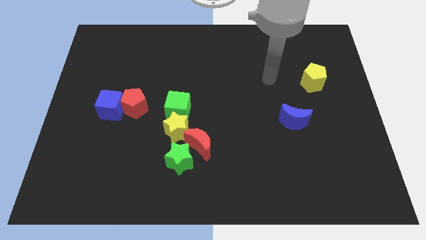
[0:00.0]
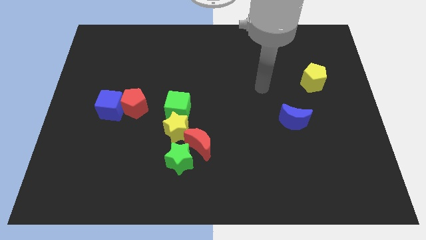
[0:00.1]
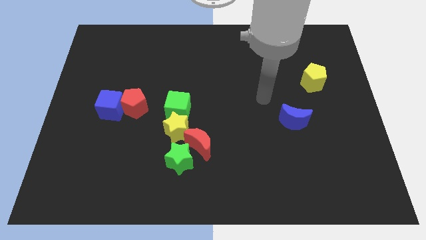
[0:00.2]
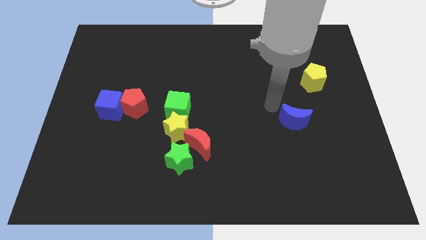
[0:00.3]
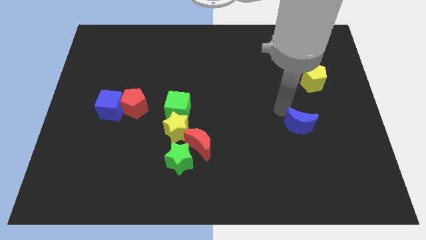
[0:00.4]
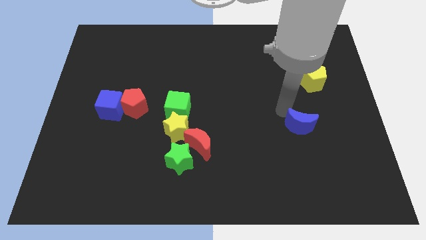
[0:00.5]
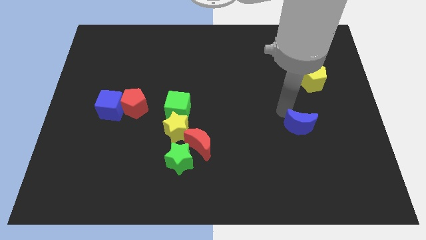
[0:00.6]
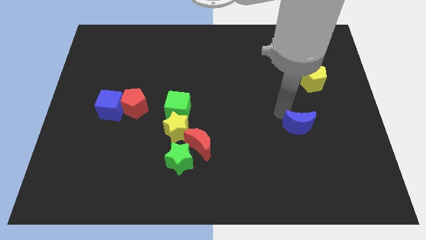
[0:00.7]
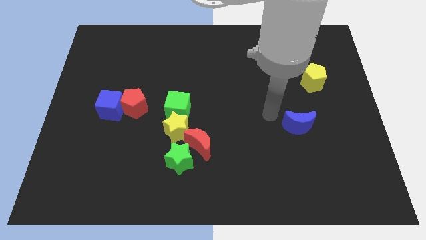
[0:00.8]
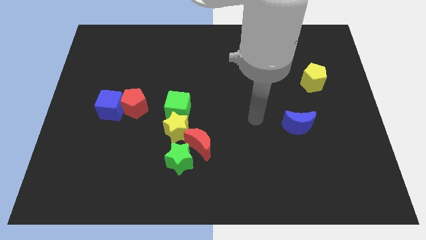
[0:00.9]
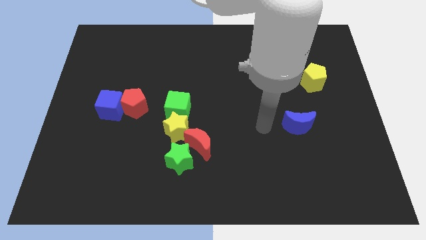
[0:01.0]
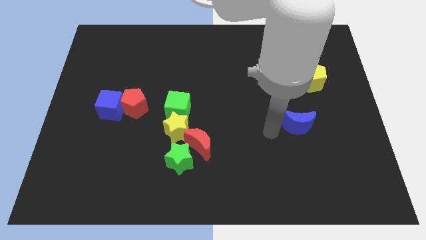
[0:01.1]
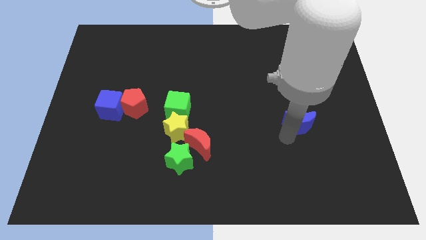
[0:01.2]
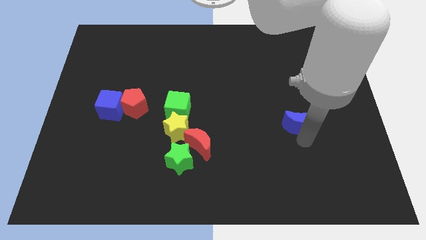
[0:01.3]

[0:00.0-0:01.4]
touch the blue crescent

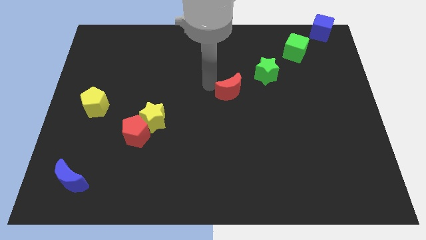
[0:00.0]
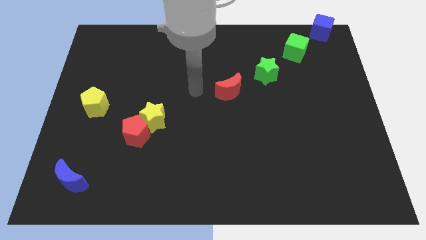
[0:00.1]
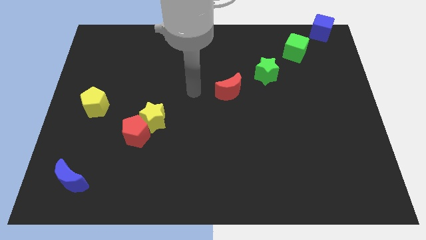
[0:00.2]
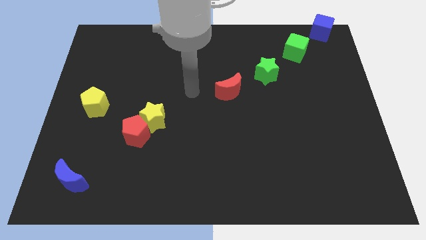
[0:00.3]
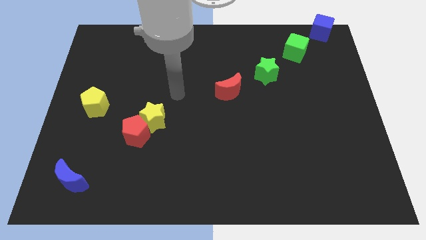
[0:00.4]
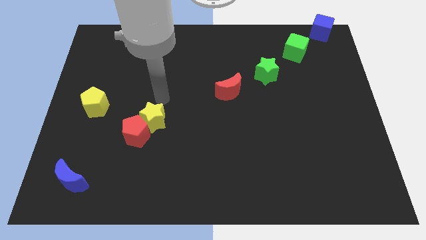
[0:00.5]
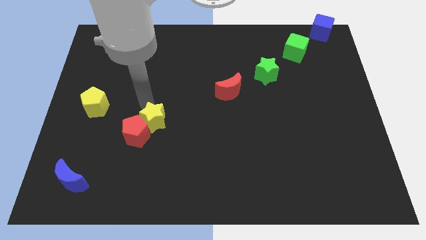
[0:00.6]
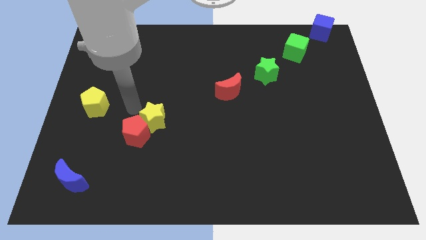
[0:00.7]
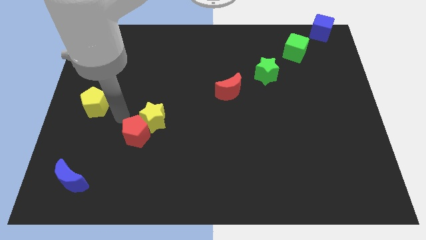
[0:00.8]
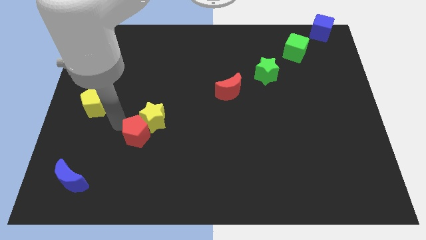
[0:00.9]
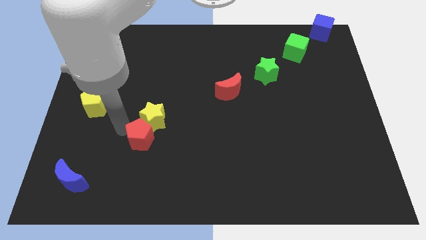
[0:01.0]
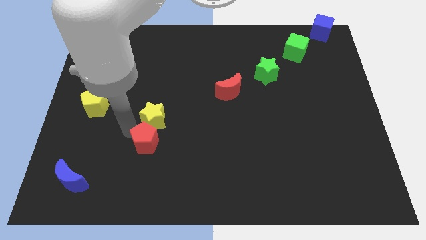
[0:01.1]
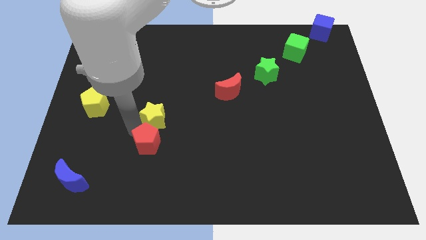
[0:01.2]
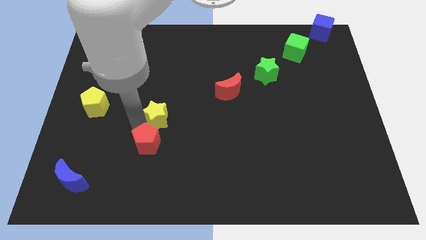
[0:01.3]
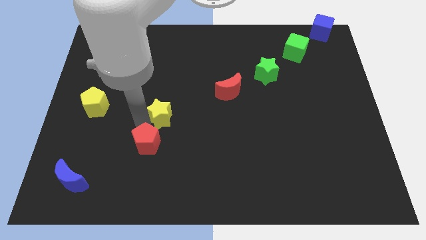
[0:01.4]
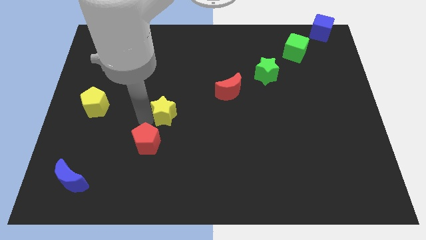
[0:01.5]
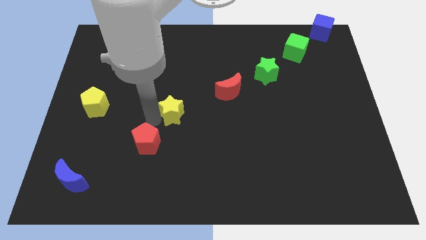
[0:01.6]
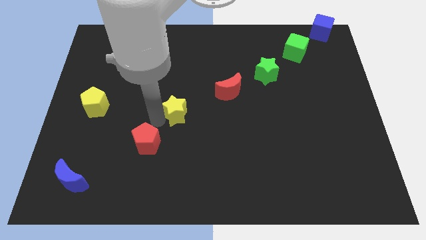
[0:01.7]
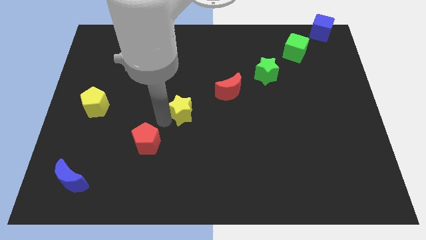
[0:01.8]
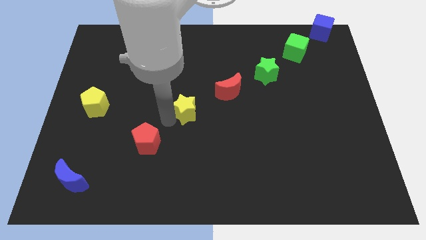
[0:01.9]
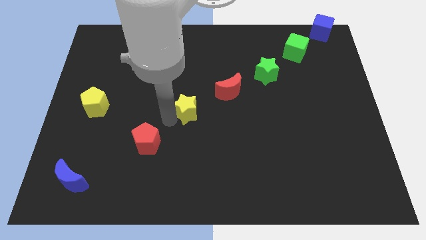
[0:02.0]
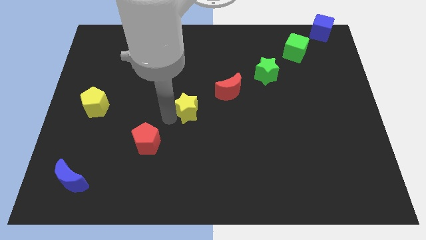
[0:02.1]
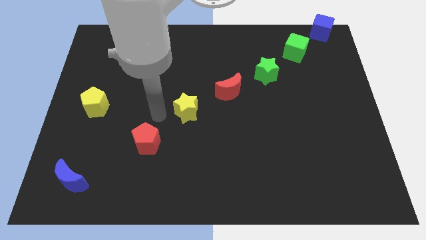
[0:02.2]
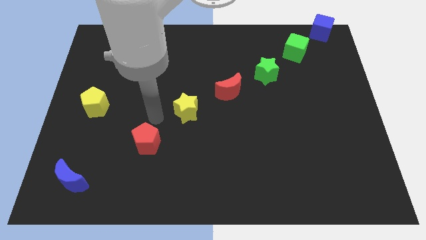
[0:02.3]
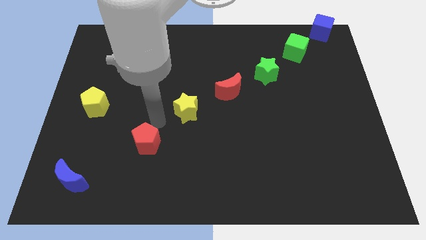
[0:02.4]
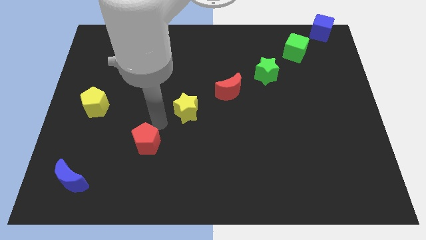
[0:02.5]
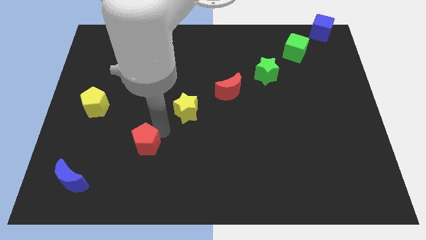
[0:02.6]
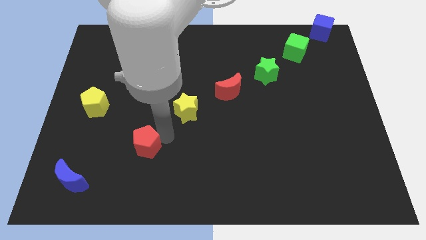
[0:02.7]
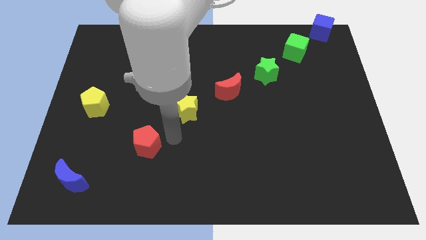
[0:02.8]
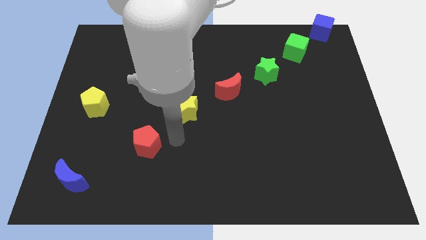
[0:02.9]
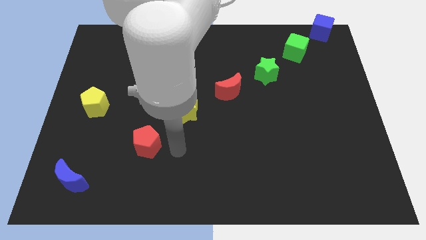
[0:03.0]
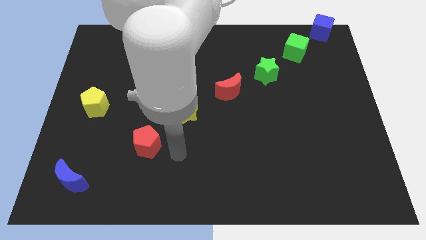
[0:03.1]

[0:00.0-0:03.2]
move the yellow star away from the red pentagon

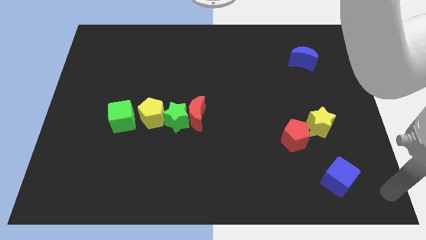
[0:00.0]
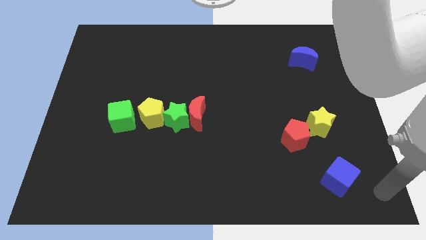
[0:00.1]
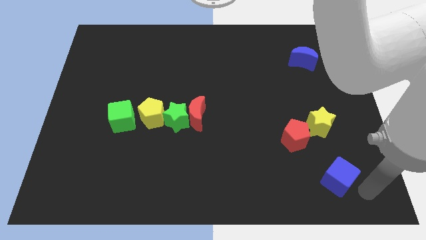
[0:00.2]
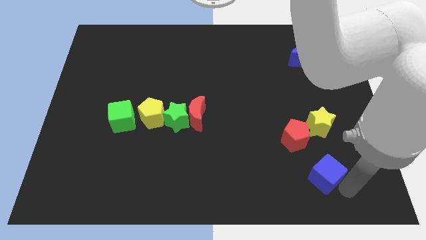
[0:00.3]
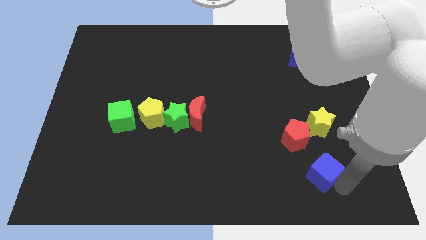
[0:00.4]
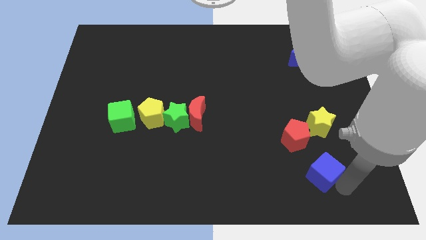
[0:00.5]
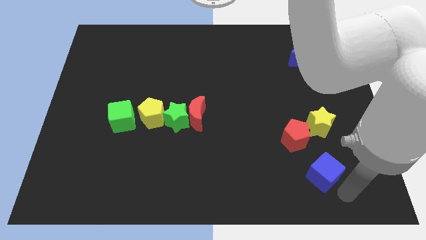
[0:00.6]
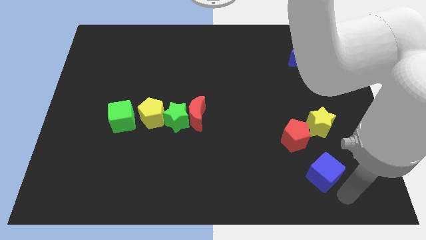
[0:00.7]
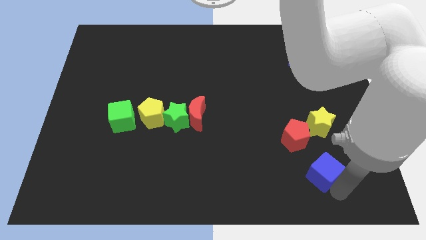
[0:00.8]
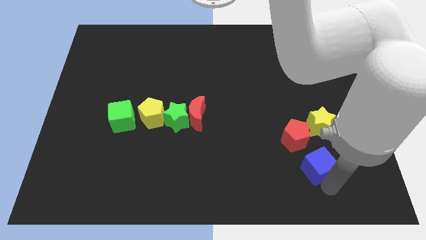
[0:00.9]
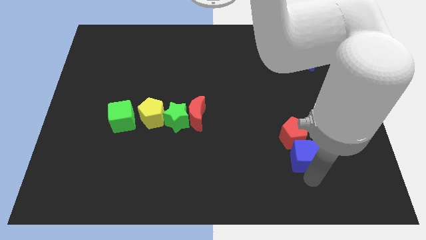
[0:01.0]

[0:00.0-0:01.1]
push the blue cube into the red pentagon

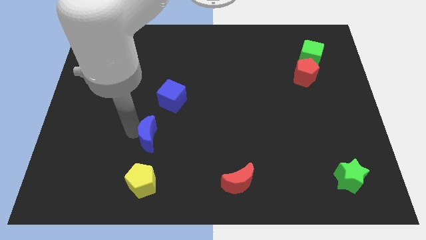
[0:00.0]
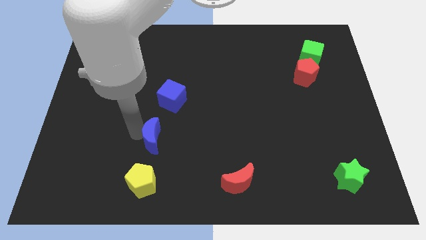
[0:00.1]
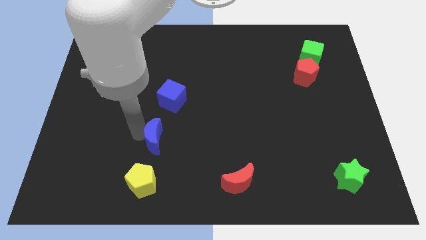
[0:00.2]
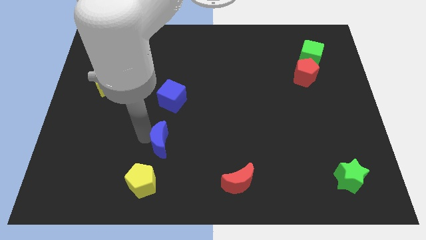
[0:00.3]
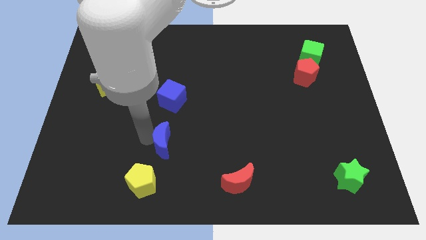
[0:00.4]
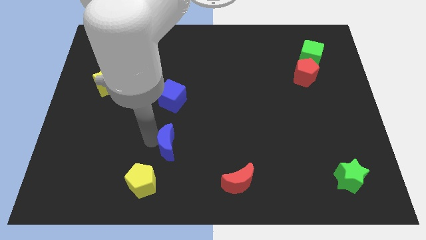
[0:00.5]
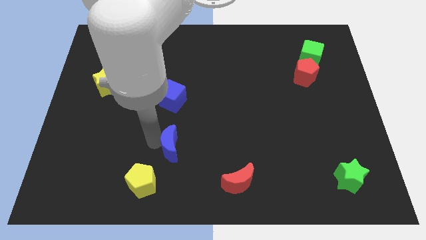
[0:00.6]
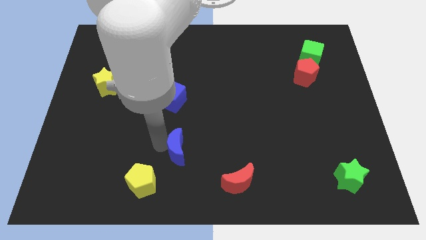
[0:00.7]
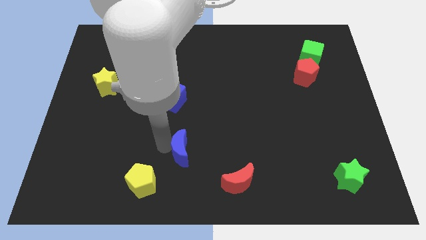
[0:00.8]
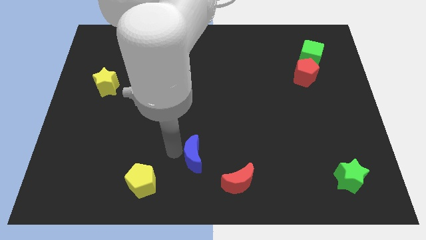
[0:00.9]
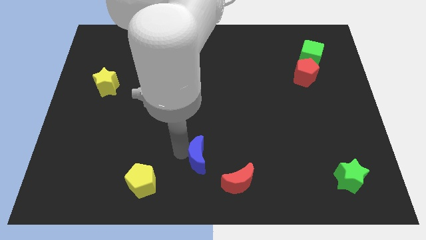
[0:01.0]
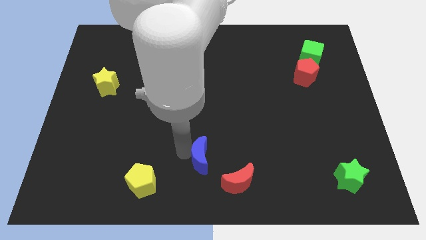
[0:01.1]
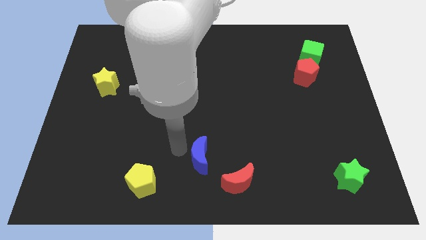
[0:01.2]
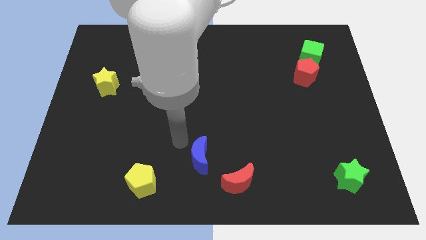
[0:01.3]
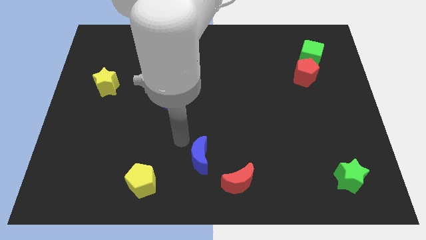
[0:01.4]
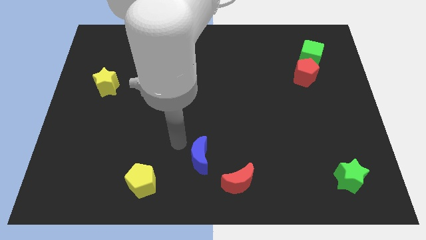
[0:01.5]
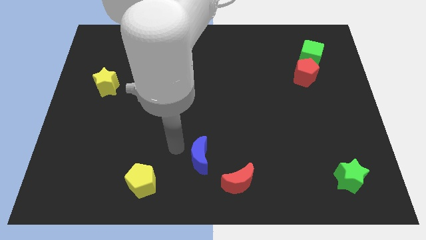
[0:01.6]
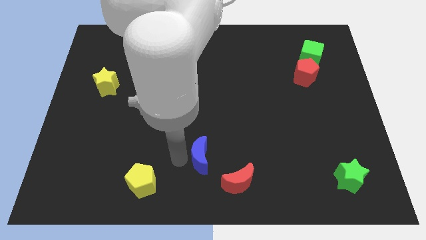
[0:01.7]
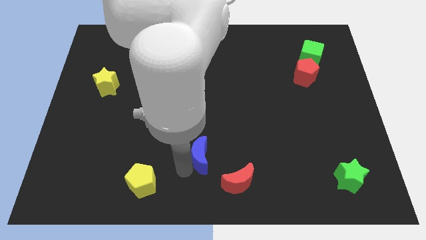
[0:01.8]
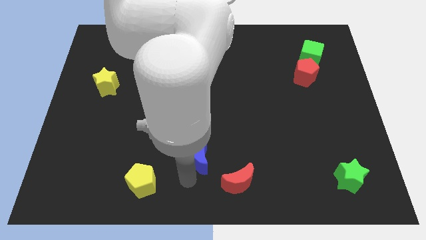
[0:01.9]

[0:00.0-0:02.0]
move the blue crescent towards the red crescent

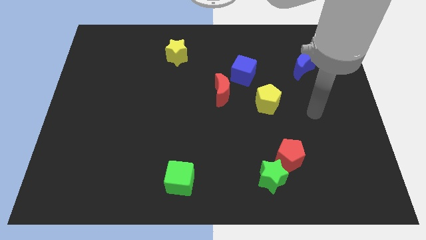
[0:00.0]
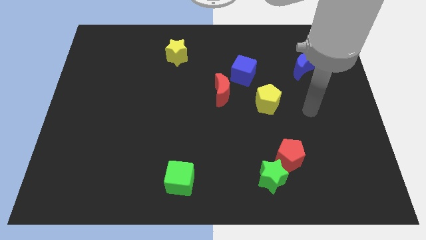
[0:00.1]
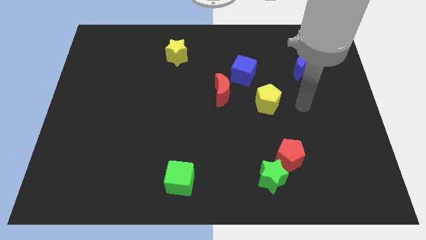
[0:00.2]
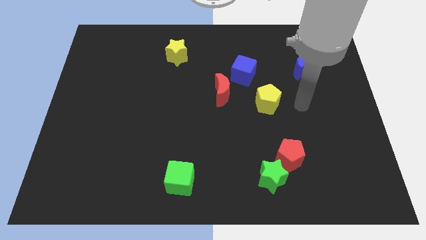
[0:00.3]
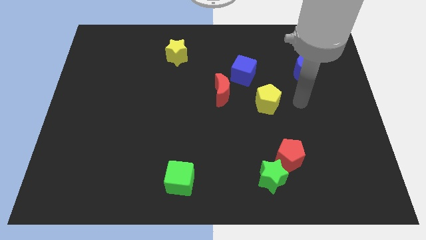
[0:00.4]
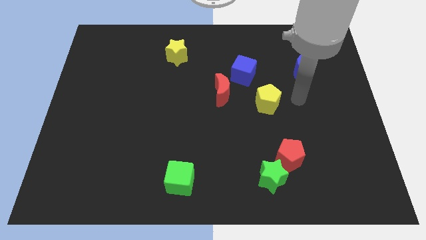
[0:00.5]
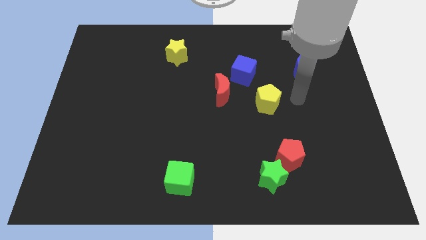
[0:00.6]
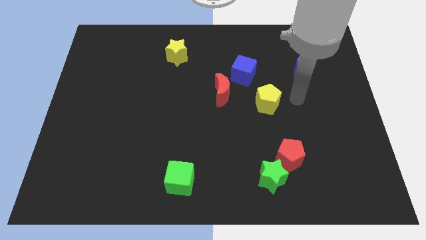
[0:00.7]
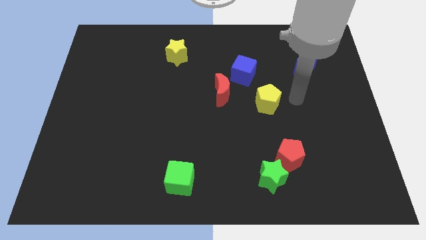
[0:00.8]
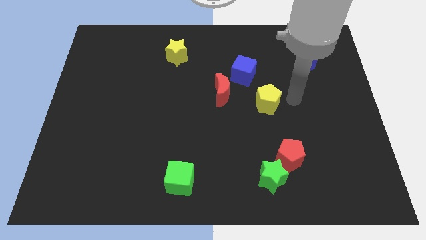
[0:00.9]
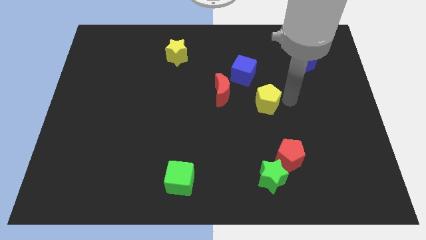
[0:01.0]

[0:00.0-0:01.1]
point your arm to the right side of yellow pentagon
